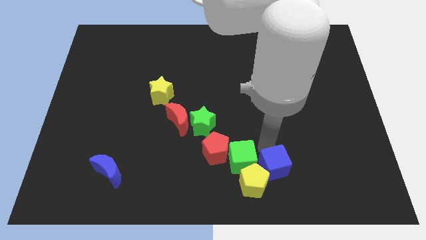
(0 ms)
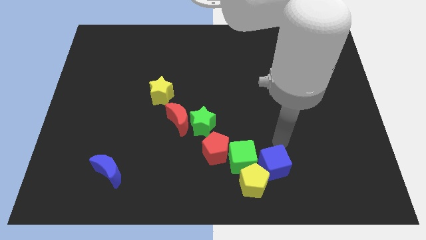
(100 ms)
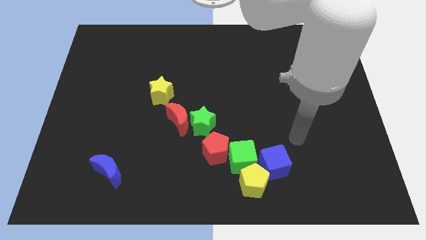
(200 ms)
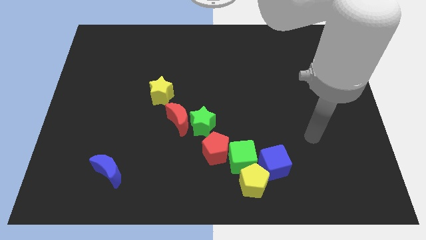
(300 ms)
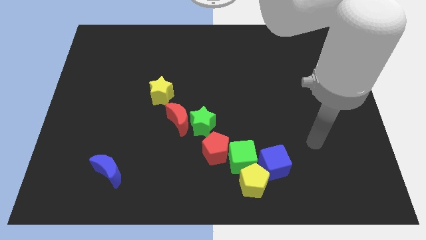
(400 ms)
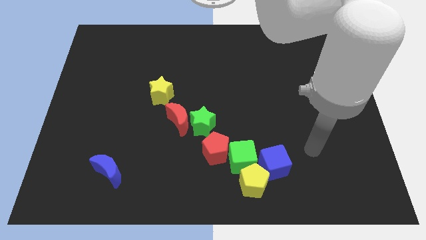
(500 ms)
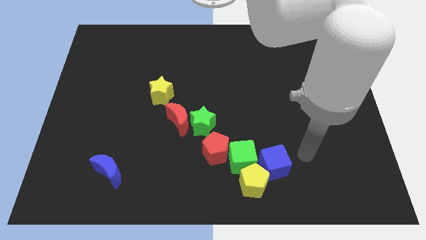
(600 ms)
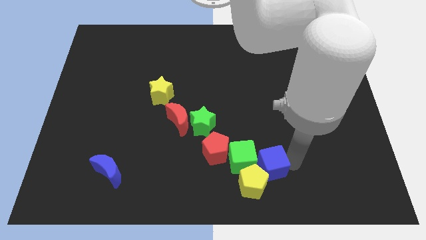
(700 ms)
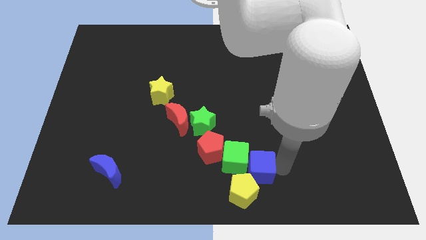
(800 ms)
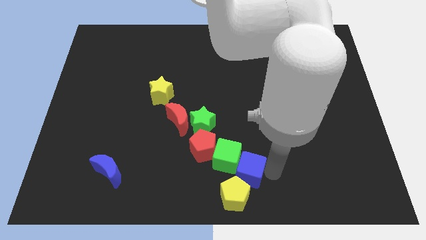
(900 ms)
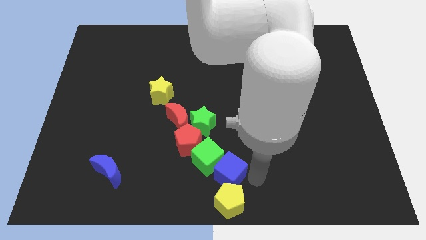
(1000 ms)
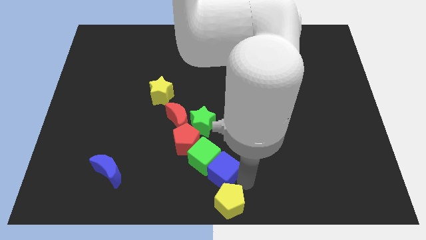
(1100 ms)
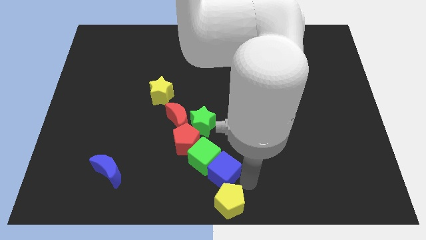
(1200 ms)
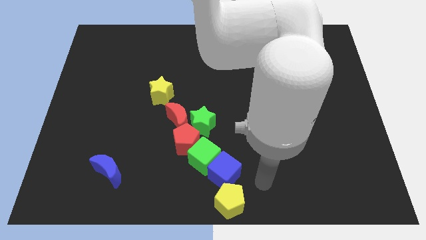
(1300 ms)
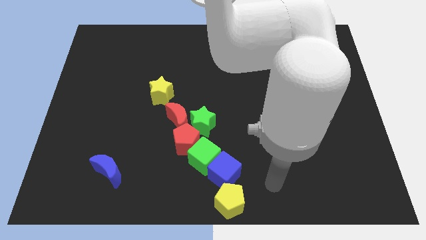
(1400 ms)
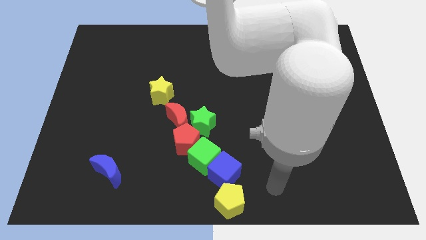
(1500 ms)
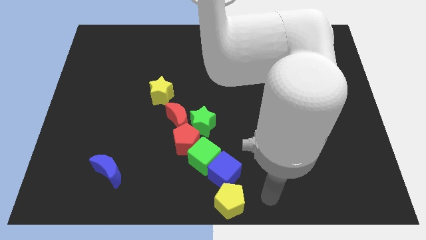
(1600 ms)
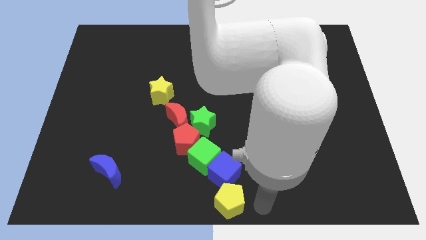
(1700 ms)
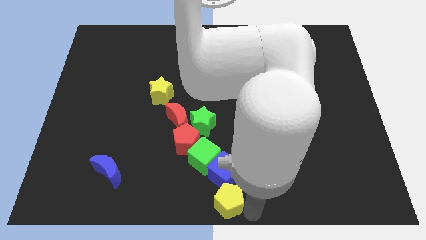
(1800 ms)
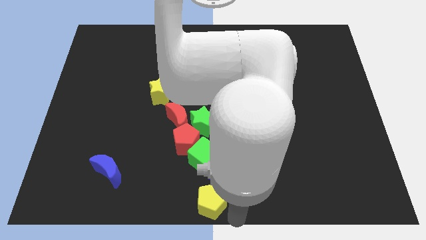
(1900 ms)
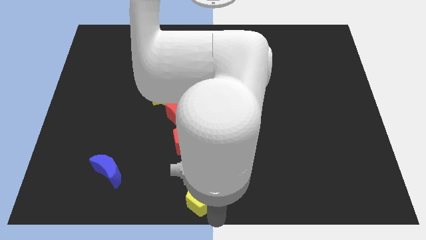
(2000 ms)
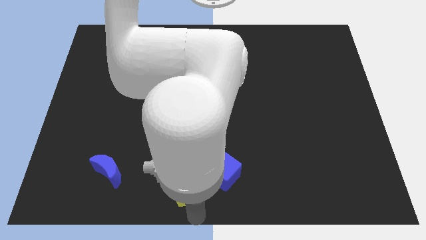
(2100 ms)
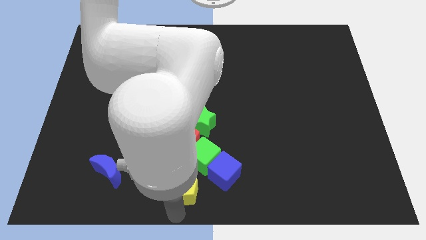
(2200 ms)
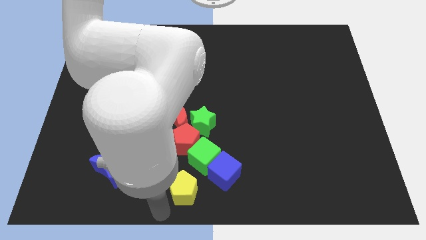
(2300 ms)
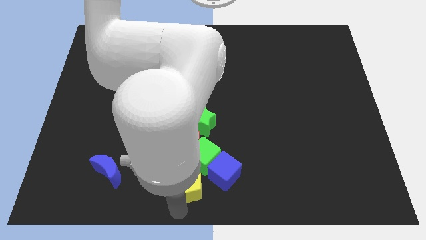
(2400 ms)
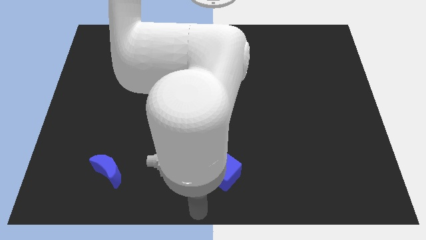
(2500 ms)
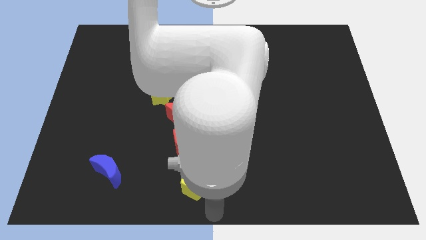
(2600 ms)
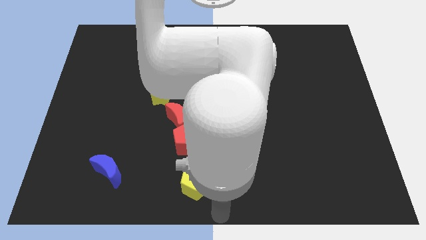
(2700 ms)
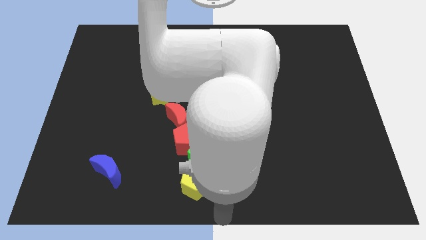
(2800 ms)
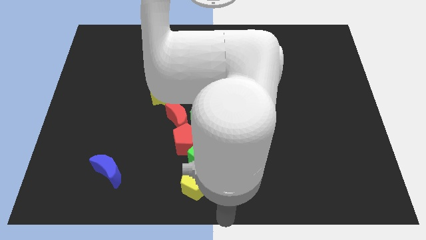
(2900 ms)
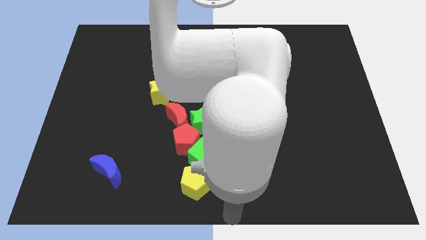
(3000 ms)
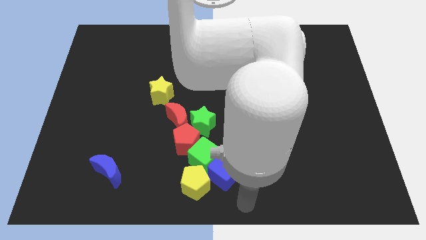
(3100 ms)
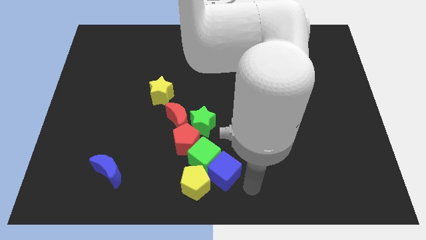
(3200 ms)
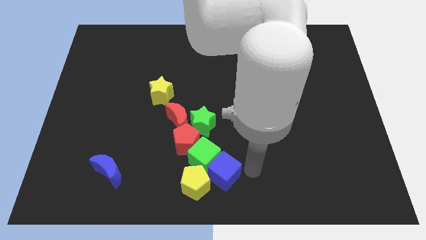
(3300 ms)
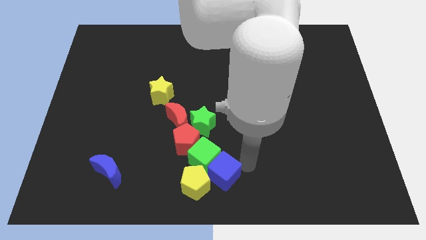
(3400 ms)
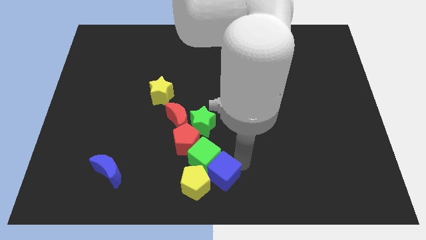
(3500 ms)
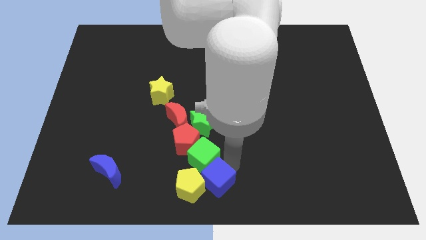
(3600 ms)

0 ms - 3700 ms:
move yellow pentagon left beside the cubes

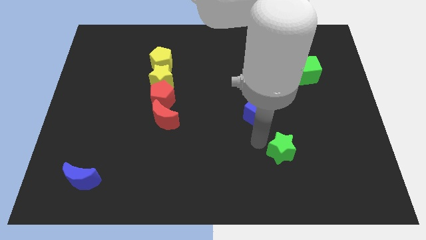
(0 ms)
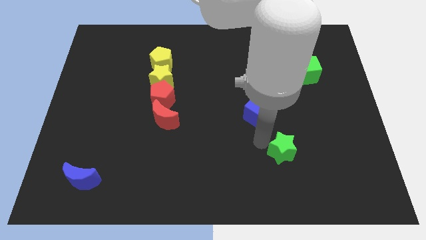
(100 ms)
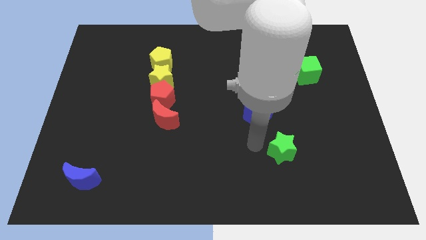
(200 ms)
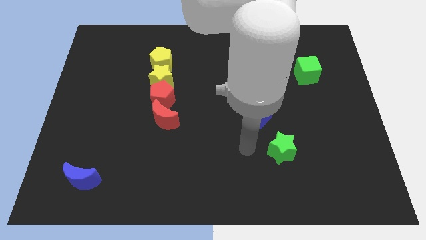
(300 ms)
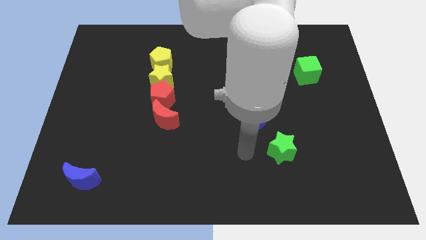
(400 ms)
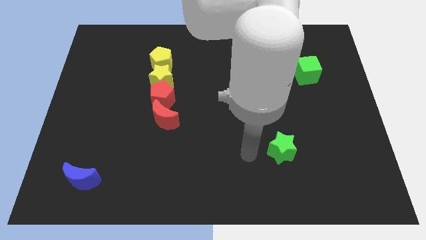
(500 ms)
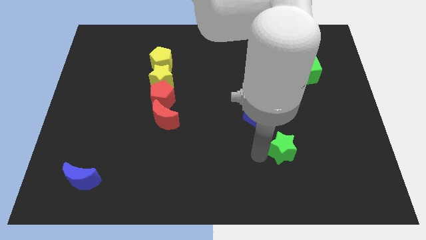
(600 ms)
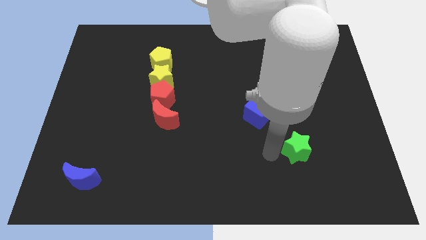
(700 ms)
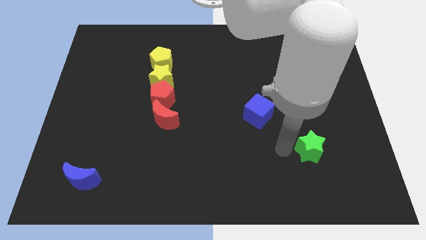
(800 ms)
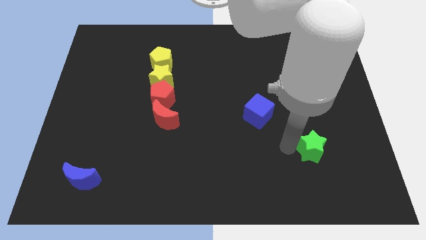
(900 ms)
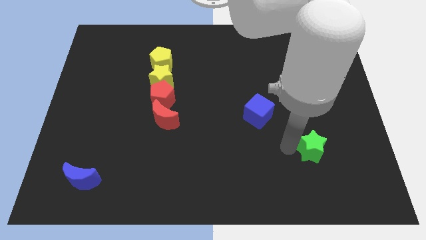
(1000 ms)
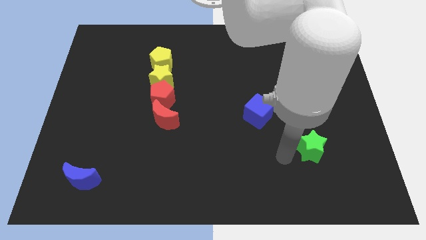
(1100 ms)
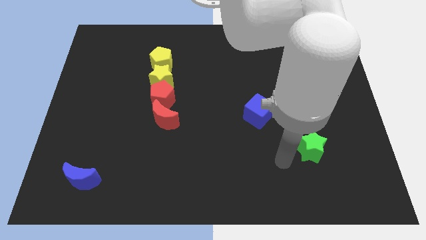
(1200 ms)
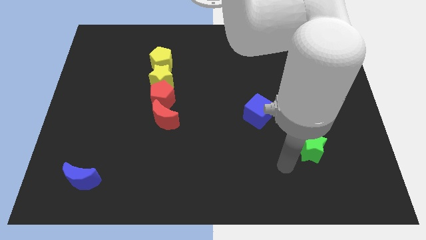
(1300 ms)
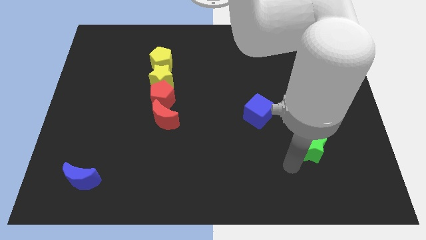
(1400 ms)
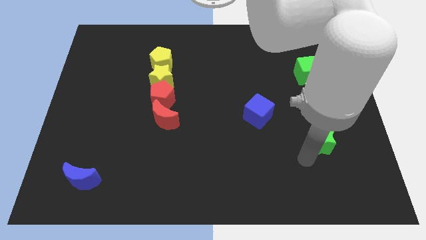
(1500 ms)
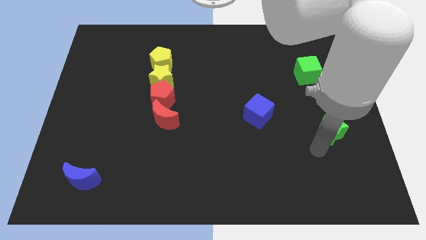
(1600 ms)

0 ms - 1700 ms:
push the green star to the right

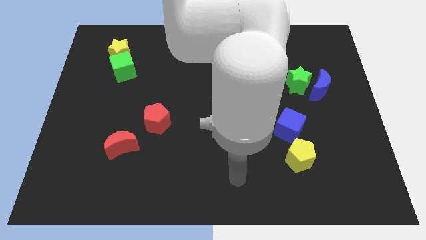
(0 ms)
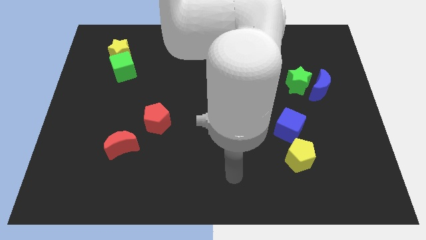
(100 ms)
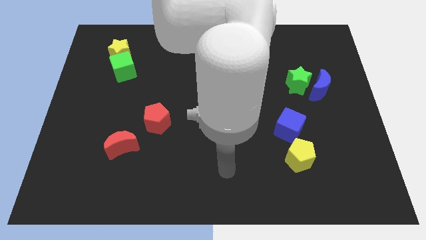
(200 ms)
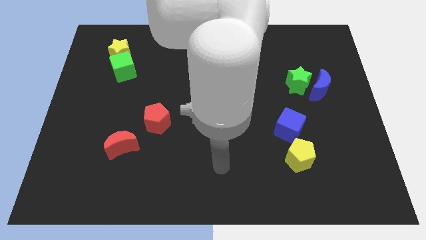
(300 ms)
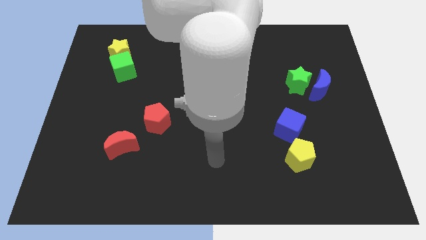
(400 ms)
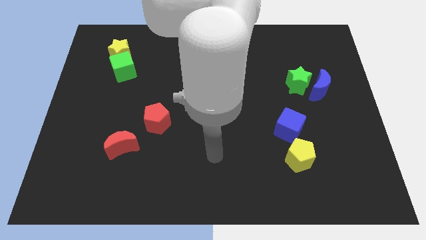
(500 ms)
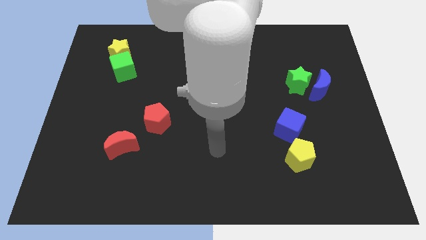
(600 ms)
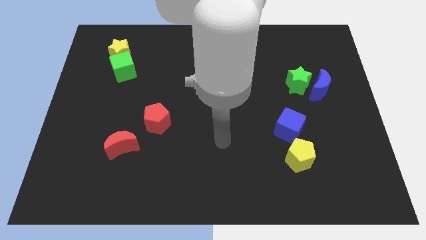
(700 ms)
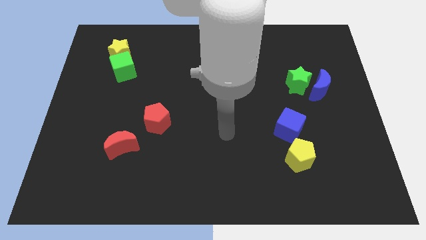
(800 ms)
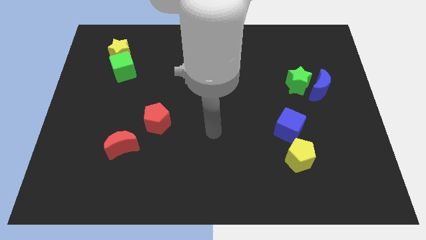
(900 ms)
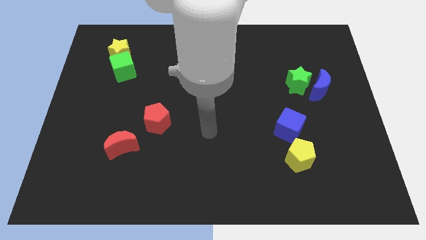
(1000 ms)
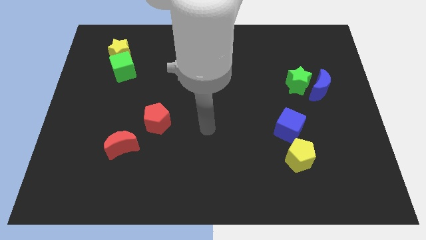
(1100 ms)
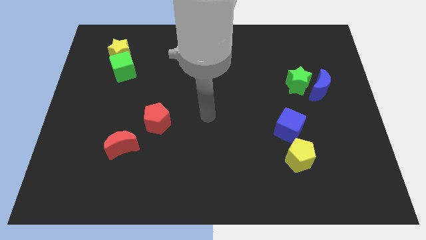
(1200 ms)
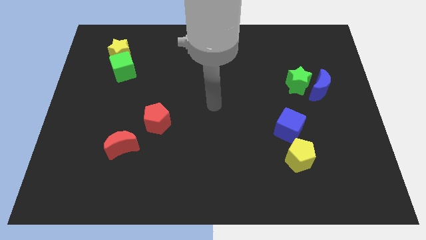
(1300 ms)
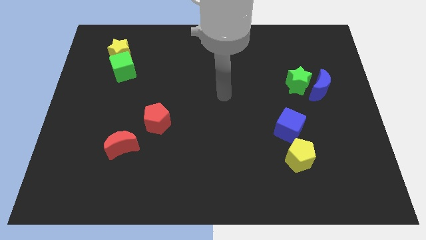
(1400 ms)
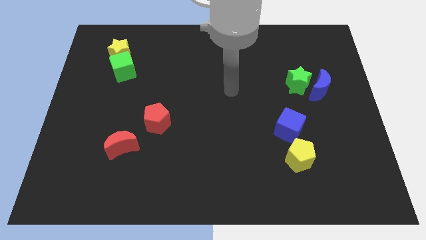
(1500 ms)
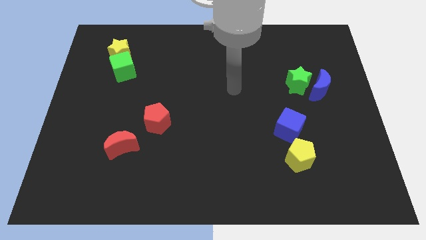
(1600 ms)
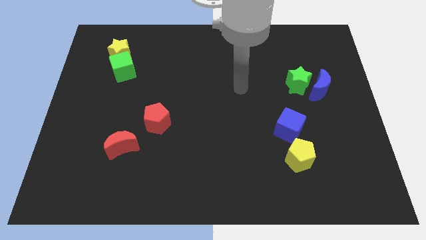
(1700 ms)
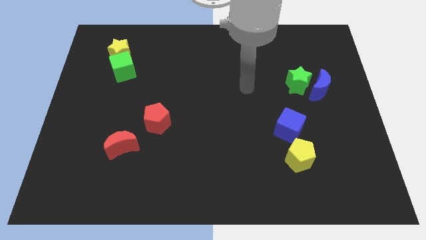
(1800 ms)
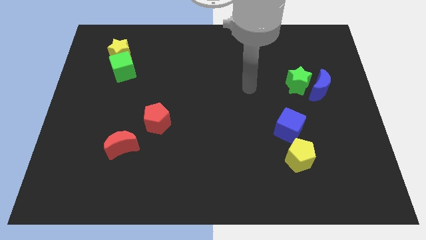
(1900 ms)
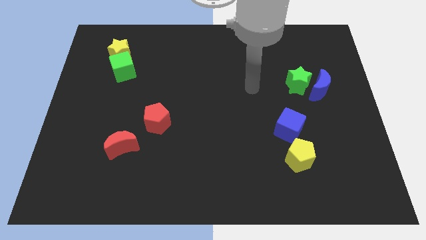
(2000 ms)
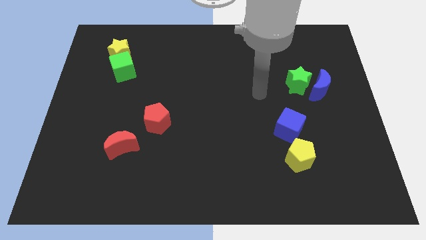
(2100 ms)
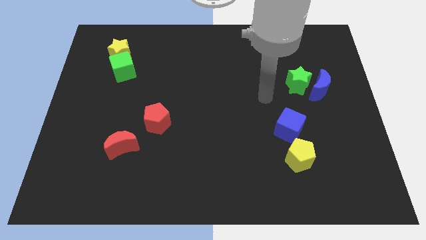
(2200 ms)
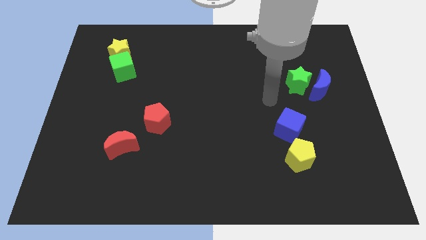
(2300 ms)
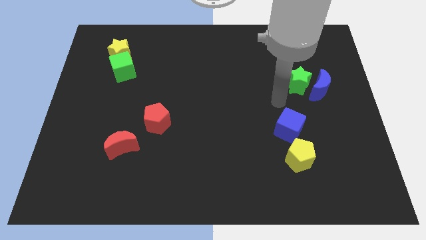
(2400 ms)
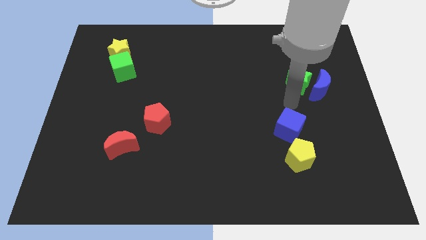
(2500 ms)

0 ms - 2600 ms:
move your arm to the top of the blue cube

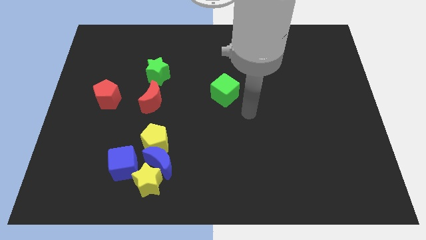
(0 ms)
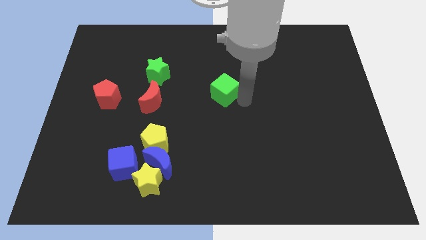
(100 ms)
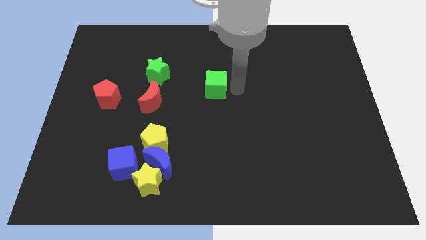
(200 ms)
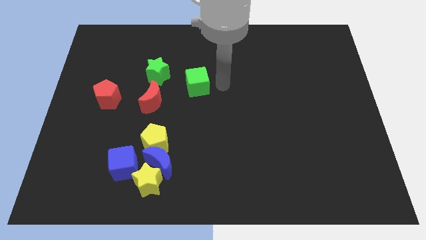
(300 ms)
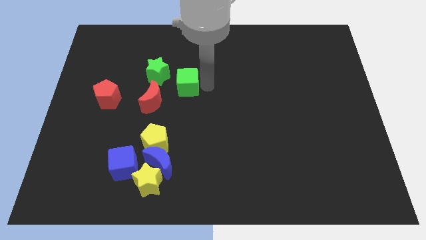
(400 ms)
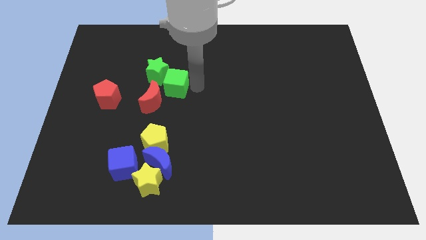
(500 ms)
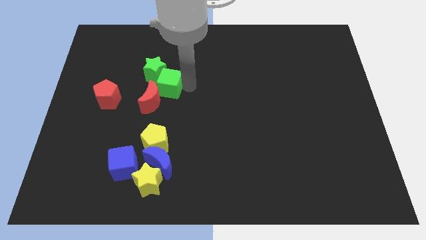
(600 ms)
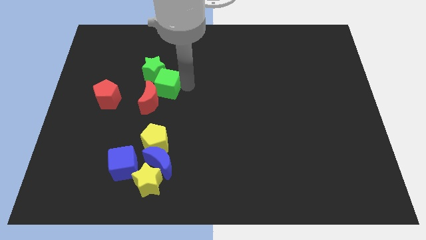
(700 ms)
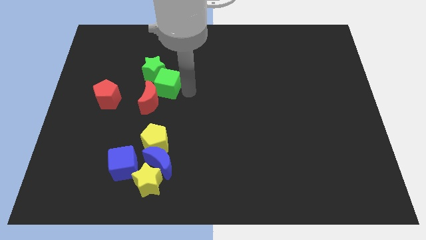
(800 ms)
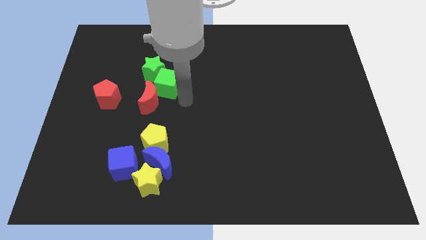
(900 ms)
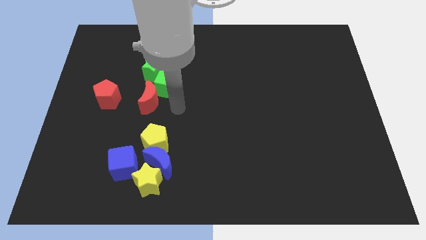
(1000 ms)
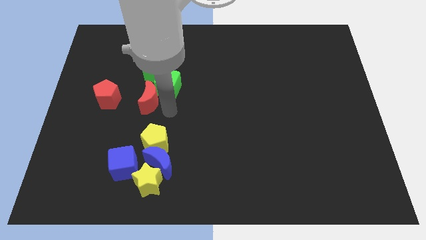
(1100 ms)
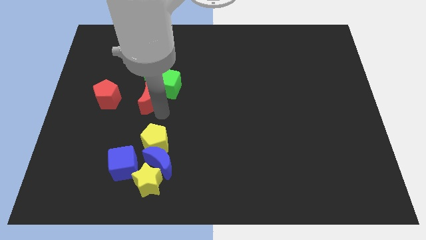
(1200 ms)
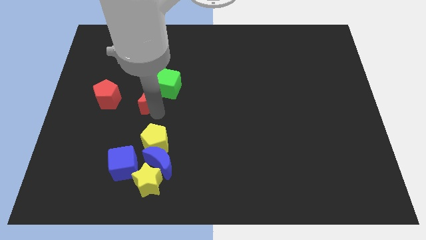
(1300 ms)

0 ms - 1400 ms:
move the green cube slightly to the left
